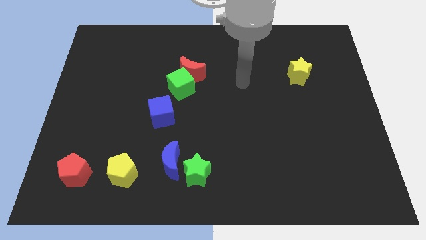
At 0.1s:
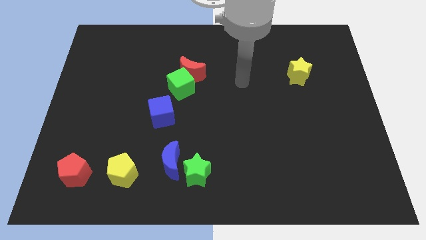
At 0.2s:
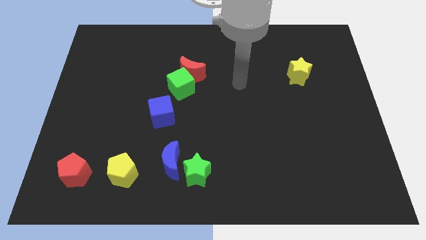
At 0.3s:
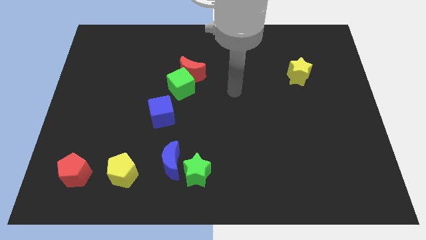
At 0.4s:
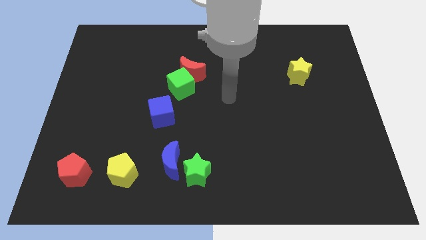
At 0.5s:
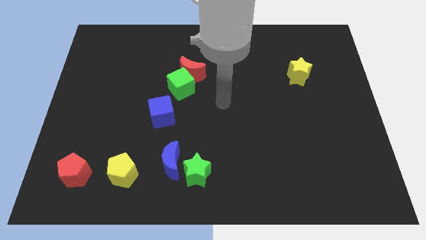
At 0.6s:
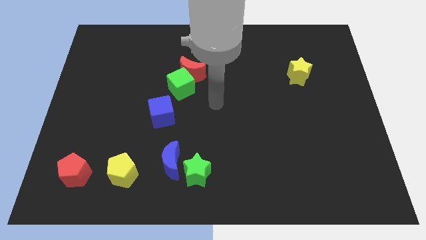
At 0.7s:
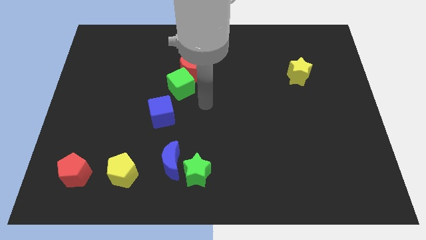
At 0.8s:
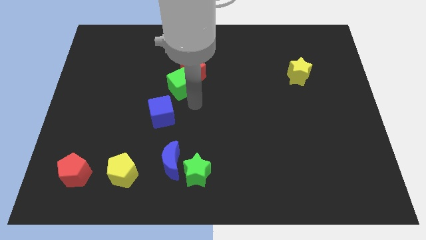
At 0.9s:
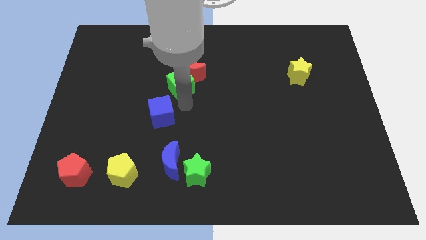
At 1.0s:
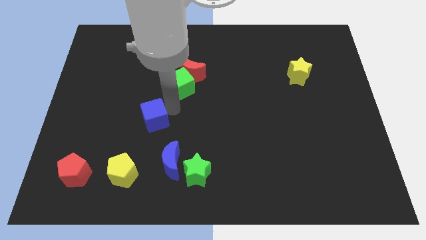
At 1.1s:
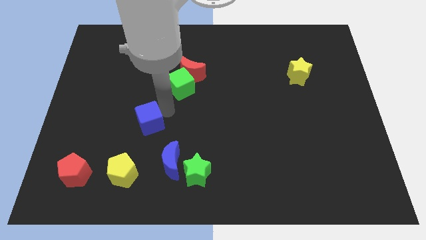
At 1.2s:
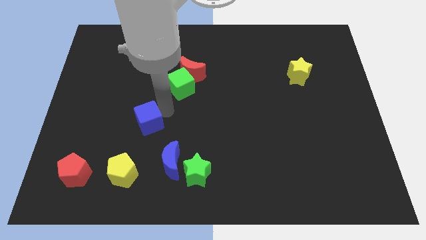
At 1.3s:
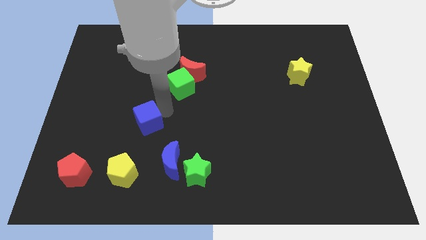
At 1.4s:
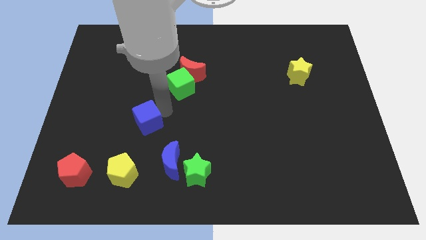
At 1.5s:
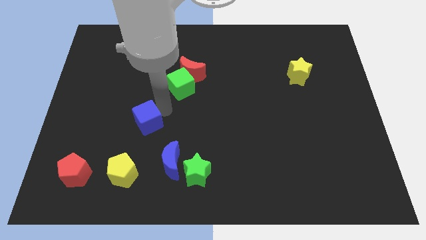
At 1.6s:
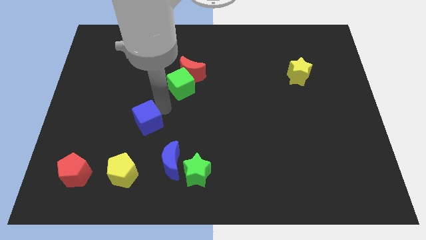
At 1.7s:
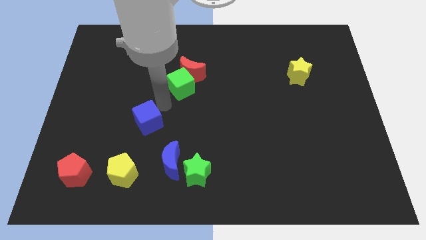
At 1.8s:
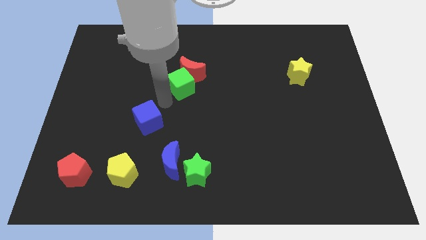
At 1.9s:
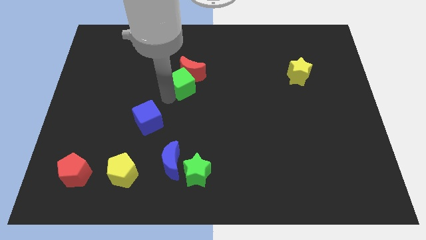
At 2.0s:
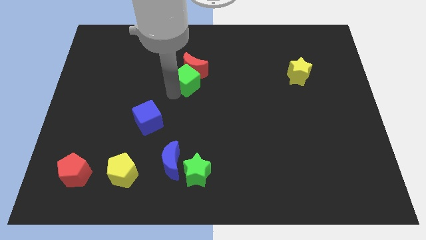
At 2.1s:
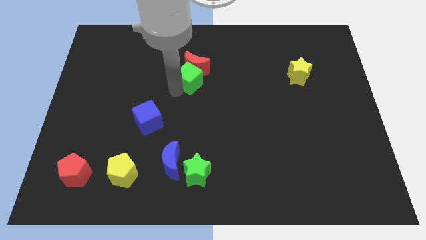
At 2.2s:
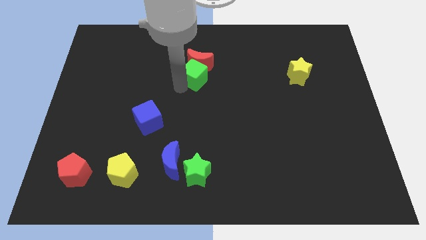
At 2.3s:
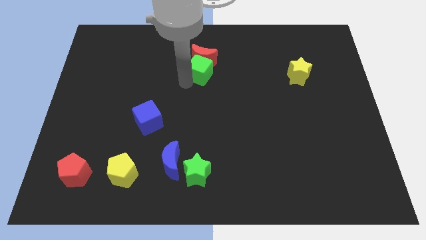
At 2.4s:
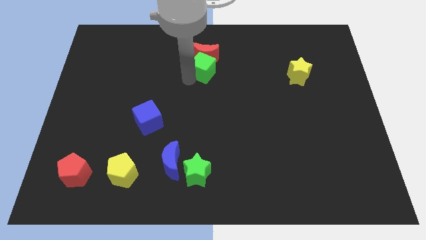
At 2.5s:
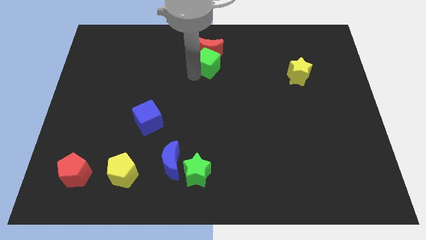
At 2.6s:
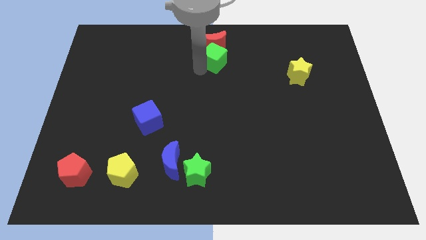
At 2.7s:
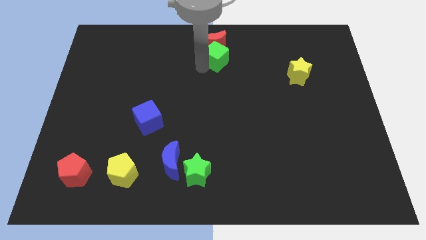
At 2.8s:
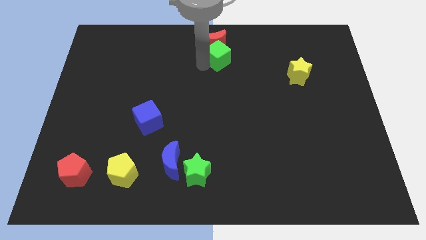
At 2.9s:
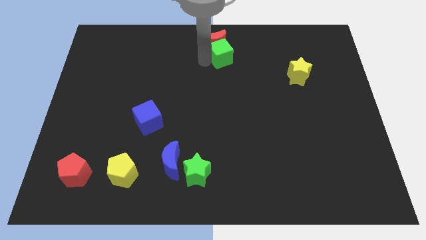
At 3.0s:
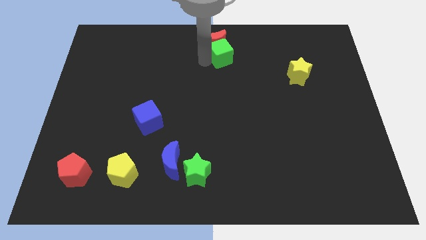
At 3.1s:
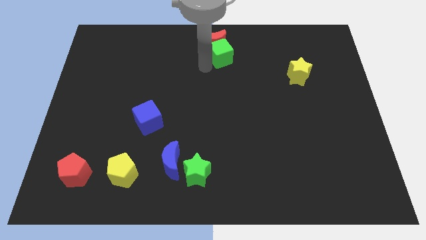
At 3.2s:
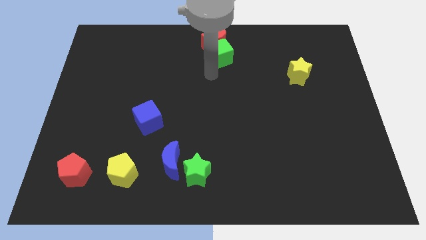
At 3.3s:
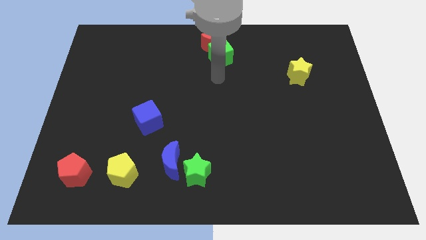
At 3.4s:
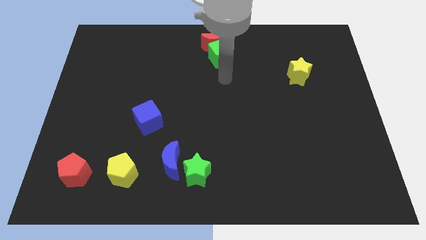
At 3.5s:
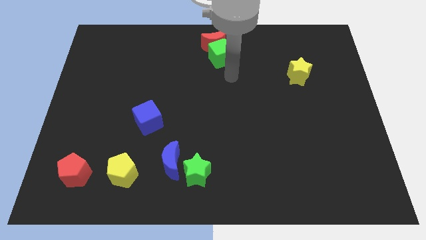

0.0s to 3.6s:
push green cube and red moon to the top center of the board

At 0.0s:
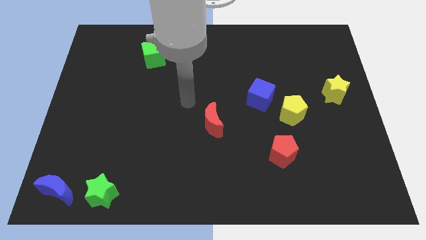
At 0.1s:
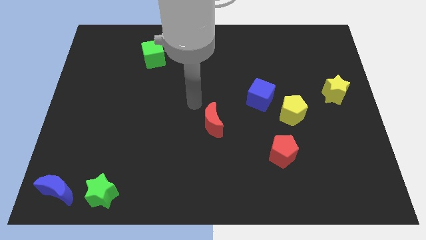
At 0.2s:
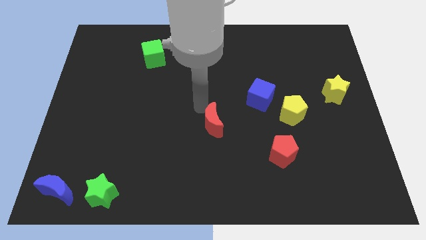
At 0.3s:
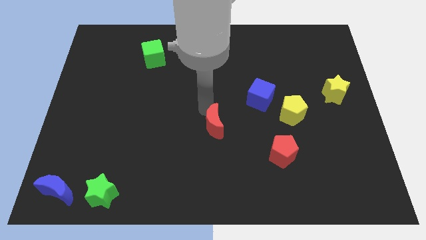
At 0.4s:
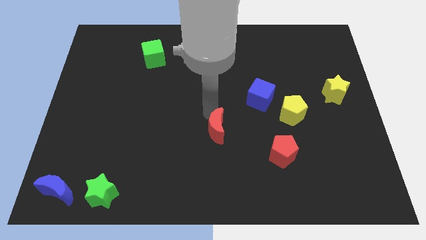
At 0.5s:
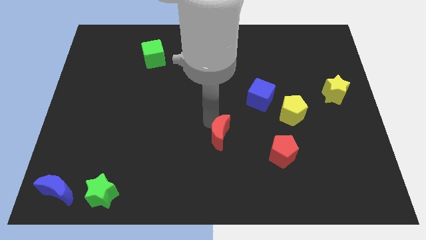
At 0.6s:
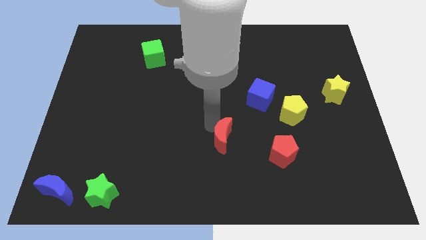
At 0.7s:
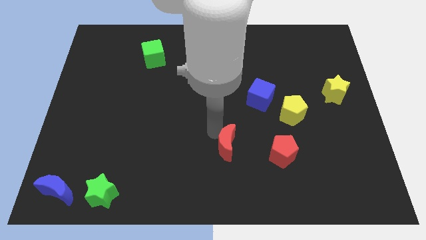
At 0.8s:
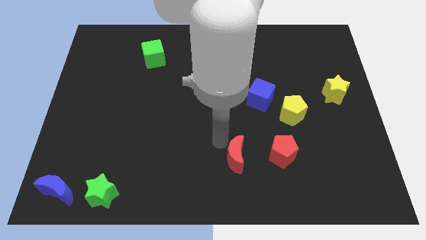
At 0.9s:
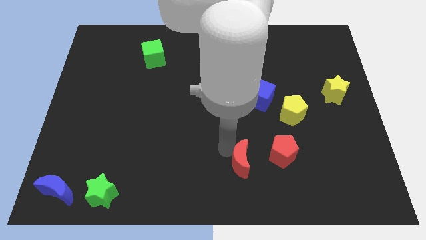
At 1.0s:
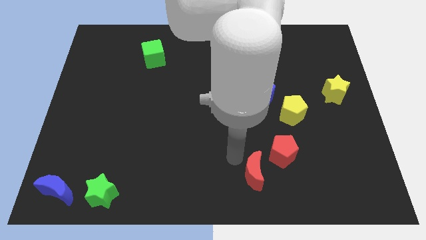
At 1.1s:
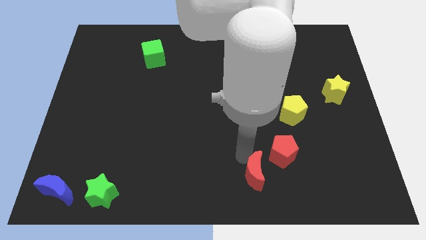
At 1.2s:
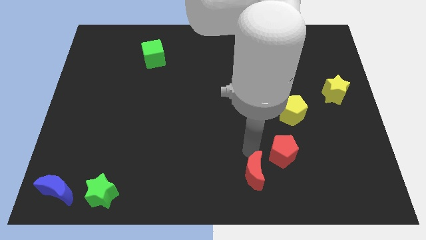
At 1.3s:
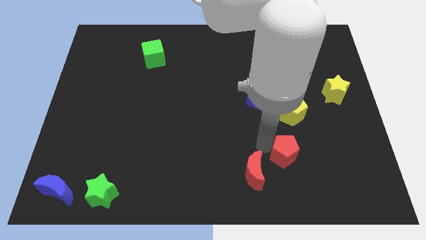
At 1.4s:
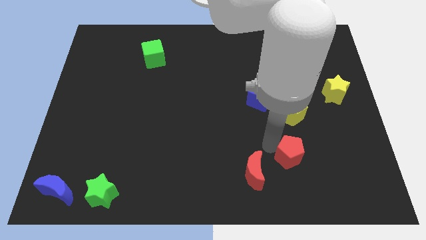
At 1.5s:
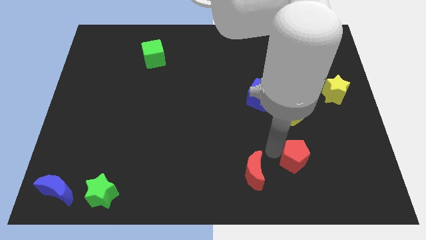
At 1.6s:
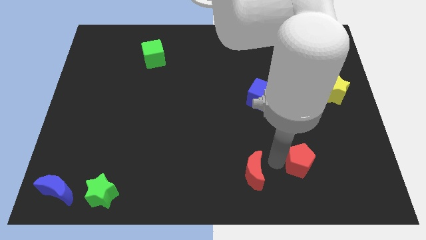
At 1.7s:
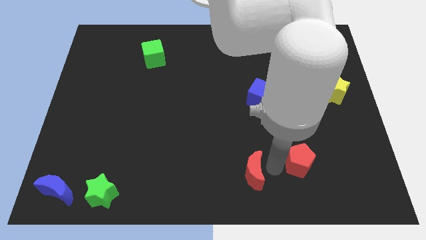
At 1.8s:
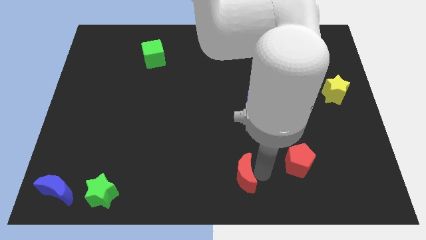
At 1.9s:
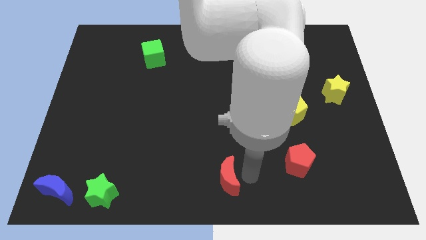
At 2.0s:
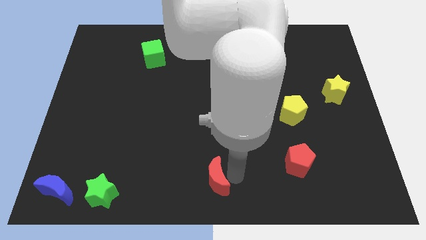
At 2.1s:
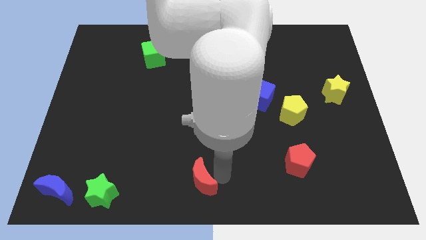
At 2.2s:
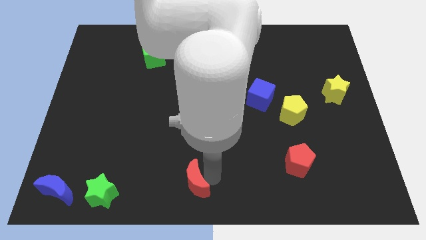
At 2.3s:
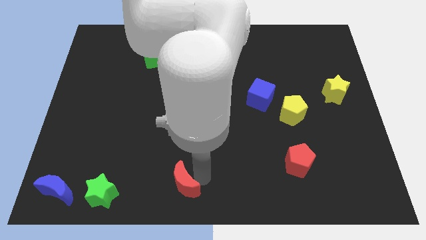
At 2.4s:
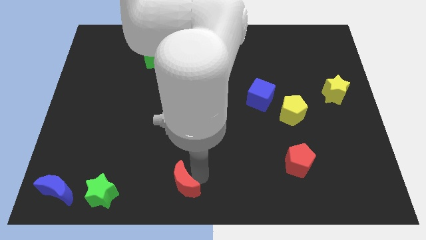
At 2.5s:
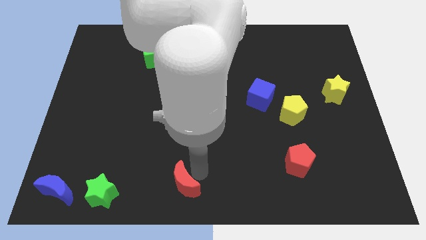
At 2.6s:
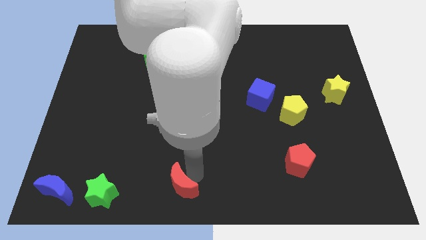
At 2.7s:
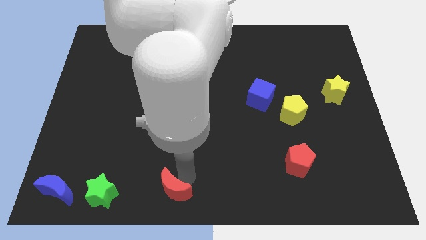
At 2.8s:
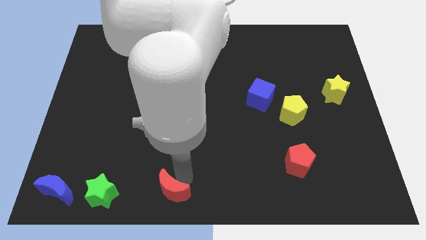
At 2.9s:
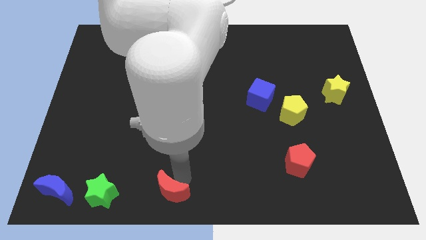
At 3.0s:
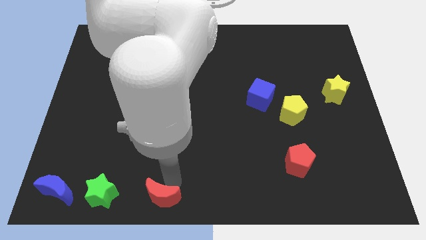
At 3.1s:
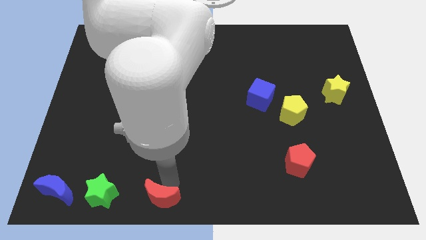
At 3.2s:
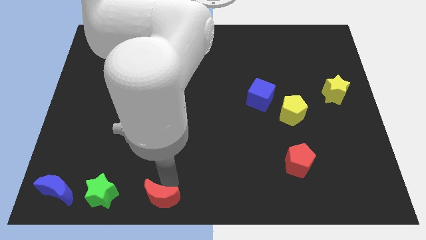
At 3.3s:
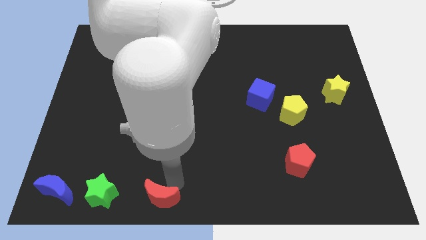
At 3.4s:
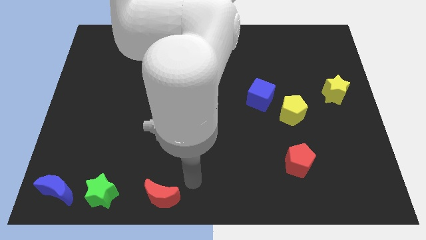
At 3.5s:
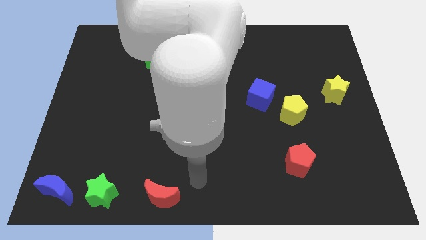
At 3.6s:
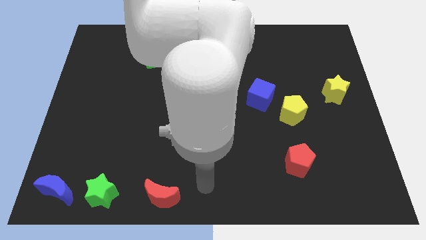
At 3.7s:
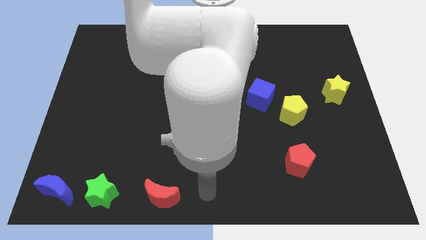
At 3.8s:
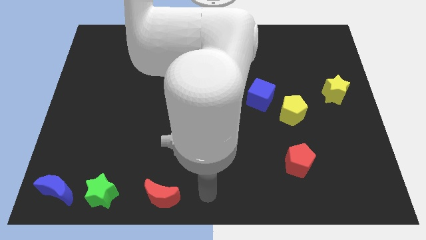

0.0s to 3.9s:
place the red crescent to the right side of the green star

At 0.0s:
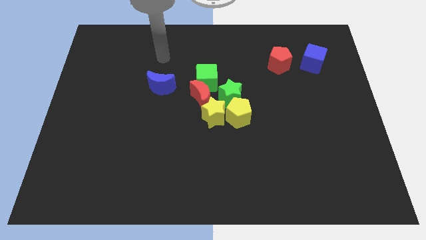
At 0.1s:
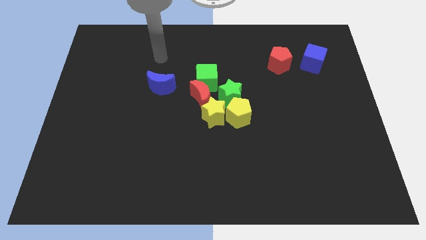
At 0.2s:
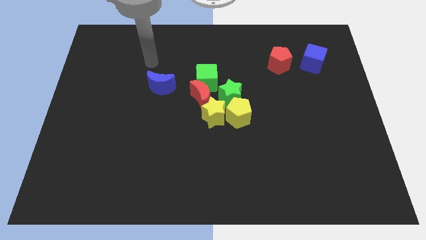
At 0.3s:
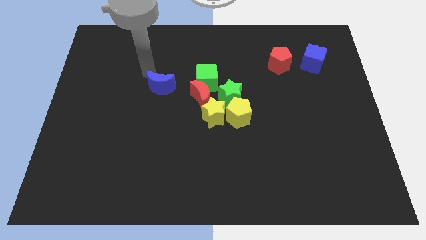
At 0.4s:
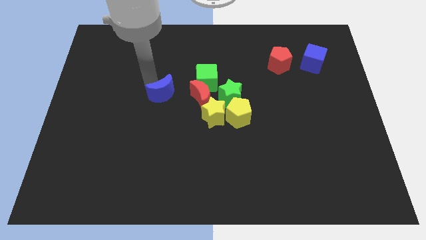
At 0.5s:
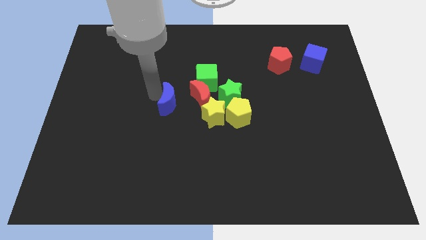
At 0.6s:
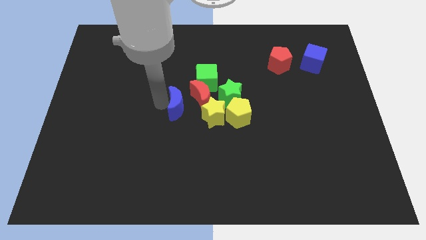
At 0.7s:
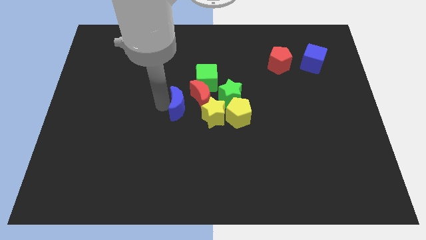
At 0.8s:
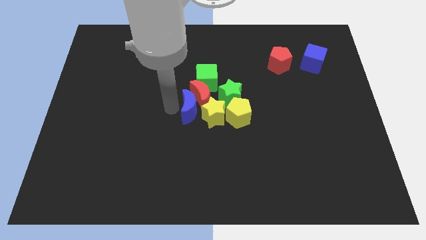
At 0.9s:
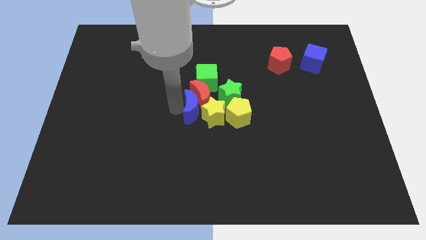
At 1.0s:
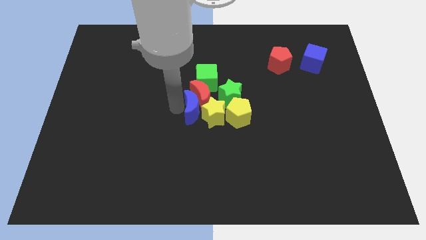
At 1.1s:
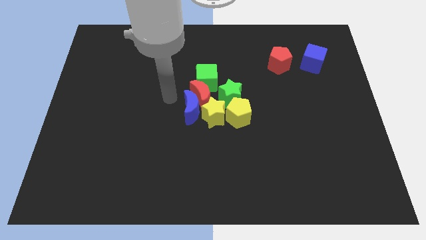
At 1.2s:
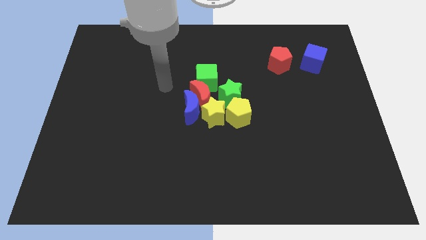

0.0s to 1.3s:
slide the blue moon close to the red moon

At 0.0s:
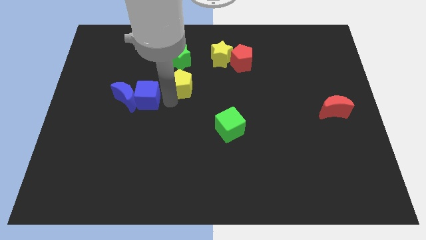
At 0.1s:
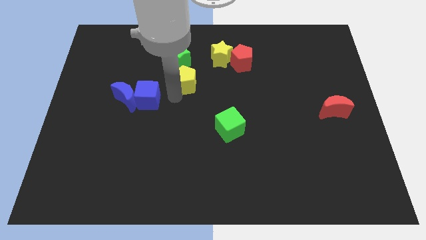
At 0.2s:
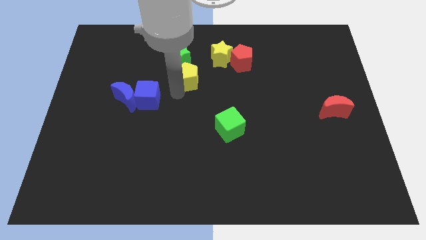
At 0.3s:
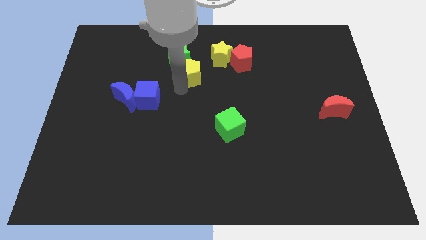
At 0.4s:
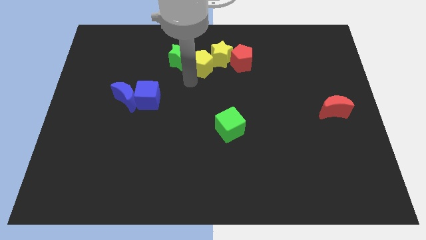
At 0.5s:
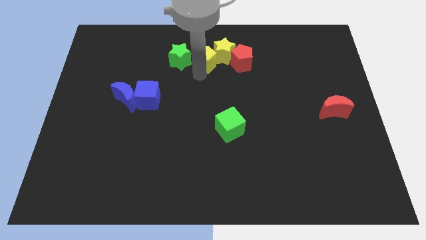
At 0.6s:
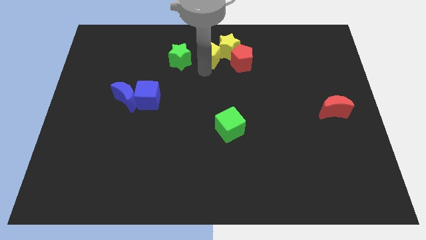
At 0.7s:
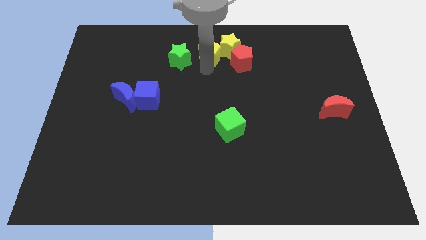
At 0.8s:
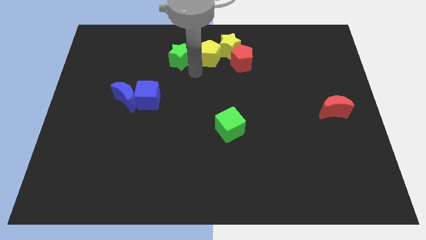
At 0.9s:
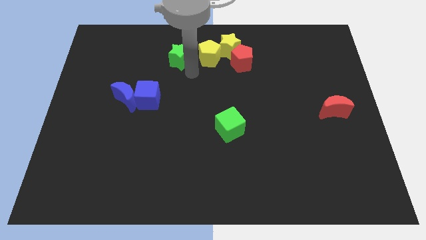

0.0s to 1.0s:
move the yellow pentagon into the yellow star
